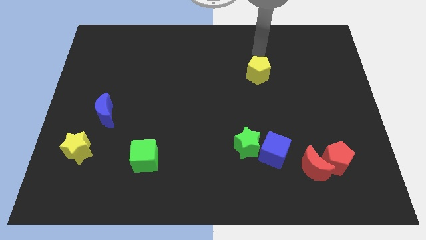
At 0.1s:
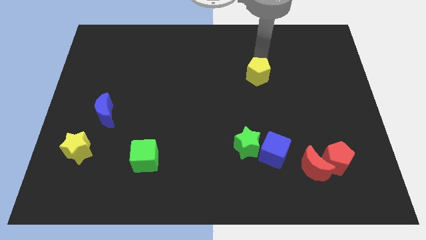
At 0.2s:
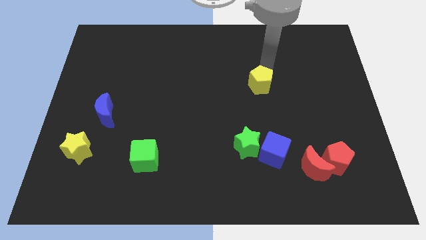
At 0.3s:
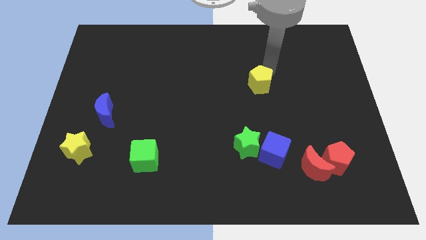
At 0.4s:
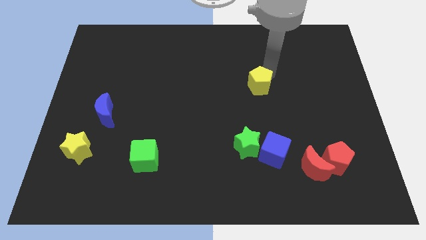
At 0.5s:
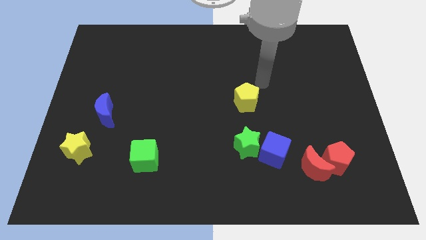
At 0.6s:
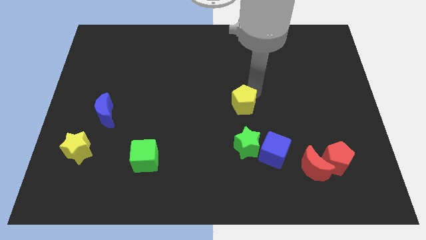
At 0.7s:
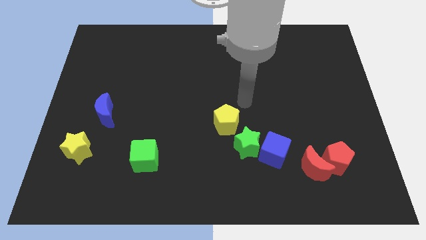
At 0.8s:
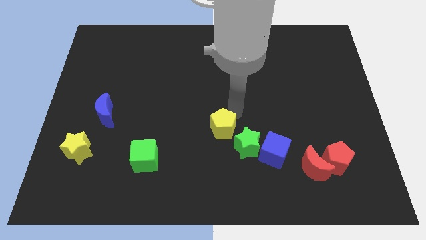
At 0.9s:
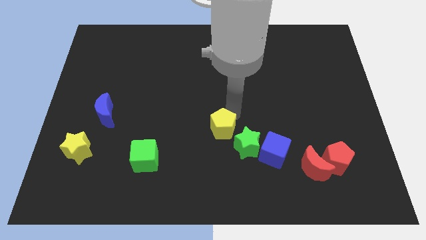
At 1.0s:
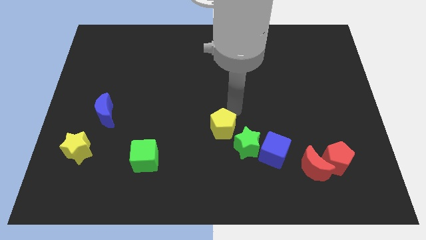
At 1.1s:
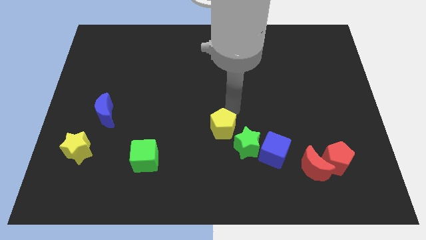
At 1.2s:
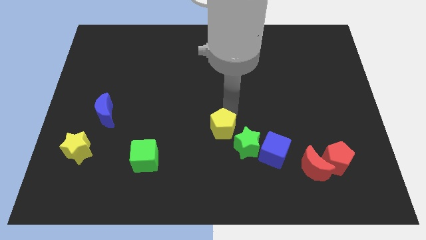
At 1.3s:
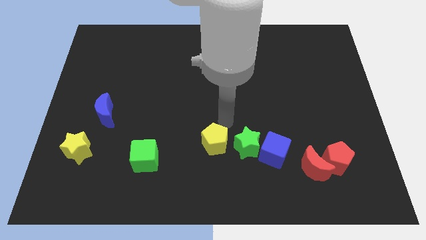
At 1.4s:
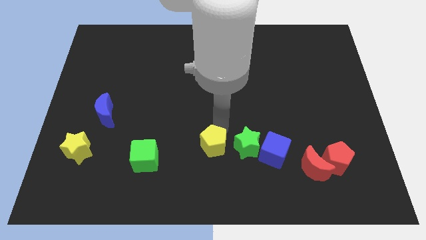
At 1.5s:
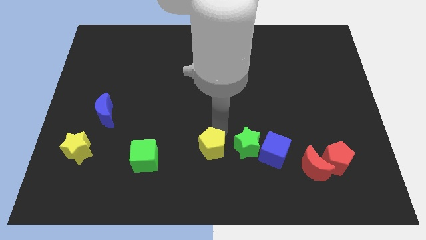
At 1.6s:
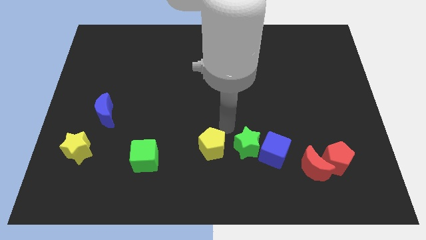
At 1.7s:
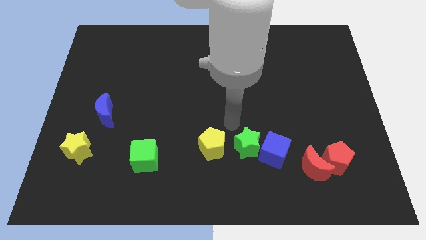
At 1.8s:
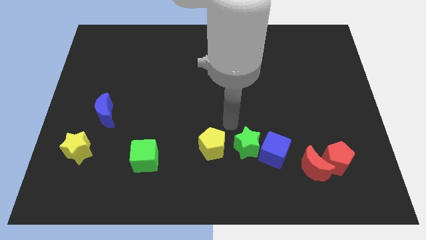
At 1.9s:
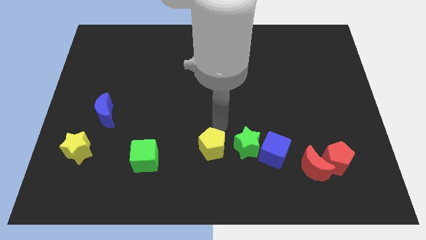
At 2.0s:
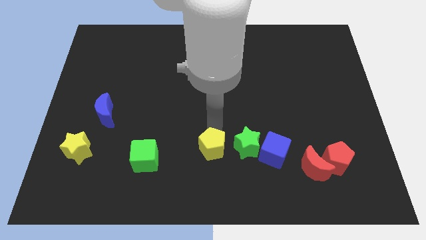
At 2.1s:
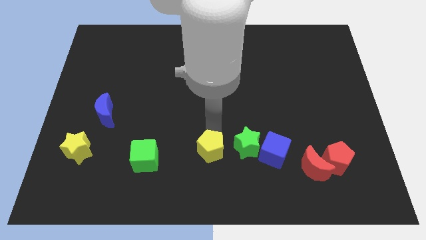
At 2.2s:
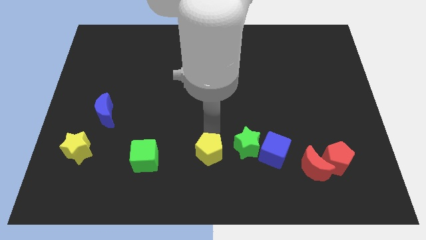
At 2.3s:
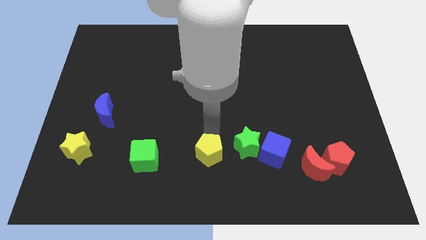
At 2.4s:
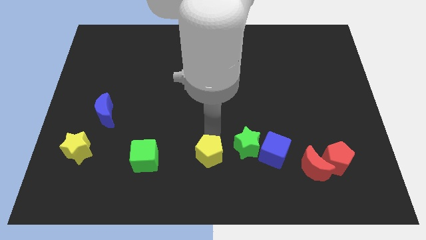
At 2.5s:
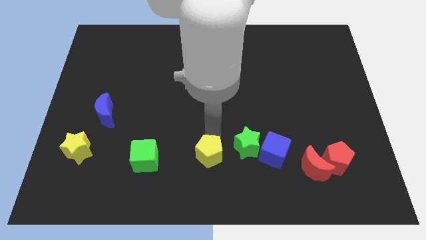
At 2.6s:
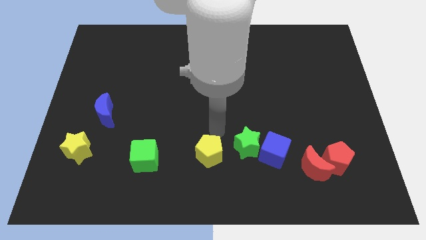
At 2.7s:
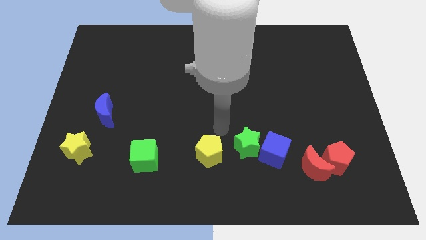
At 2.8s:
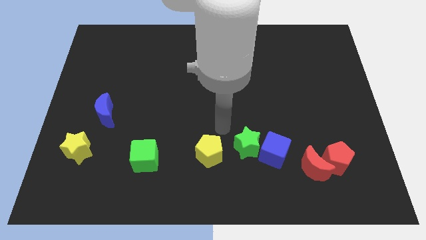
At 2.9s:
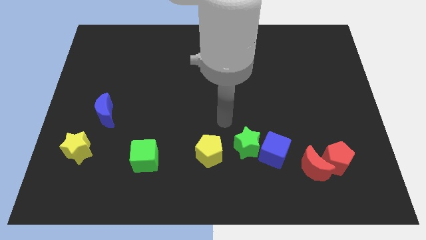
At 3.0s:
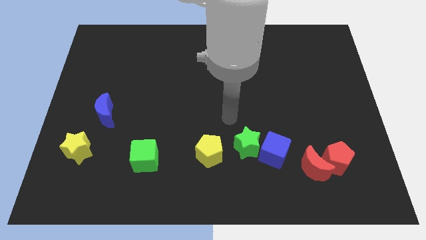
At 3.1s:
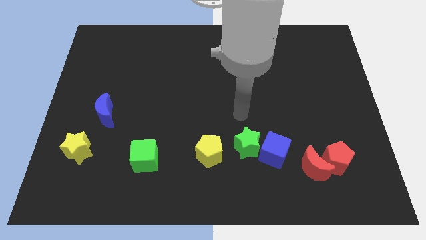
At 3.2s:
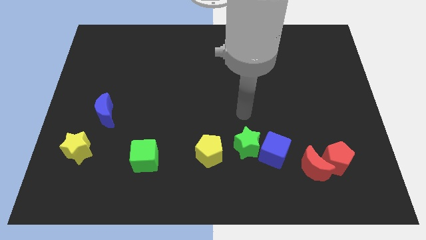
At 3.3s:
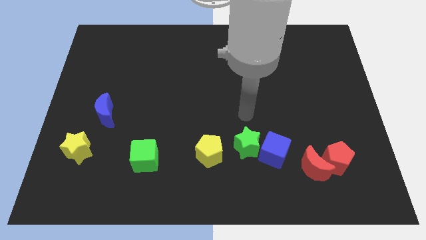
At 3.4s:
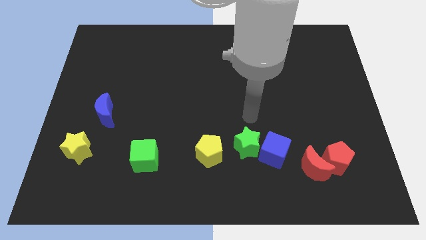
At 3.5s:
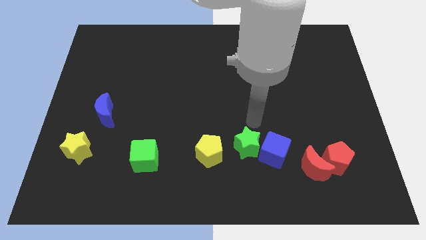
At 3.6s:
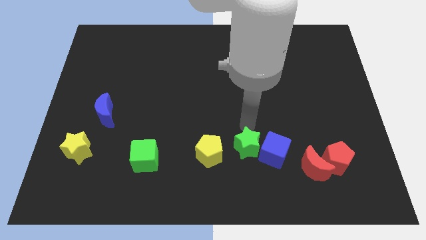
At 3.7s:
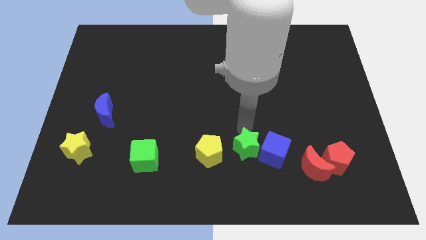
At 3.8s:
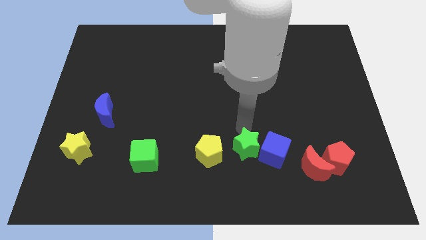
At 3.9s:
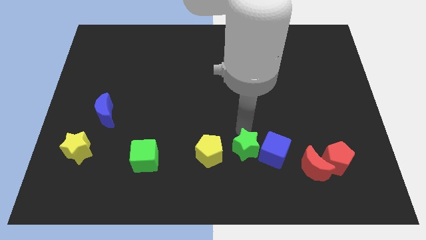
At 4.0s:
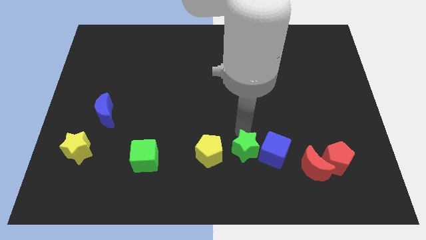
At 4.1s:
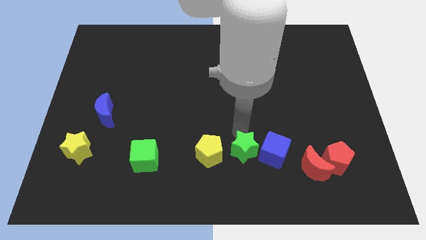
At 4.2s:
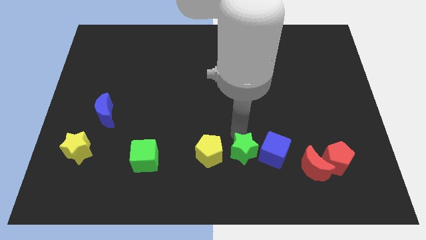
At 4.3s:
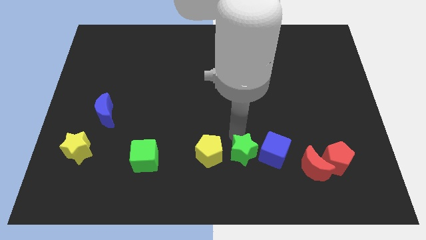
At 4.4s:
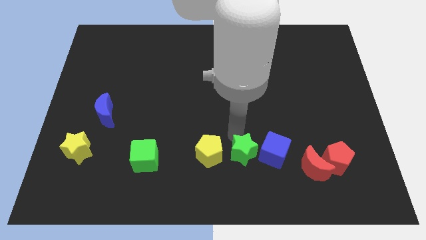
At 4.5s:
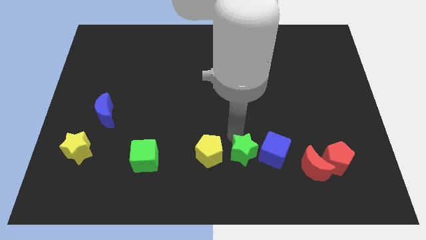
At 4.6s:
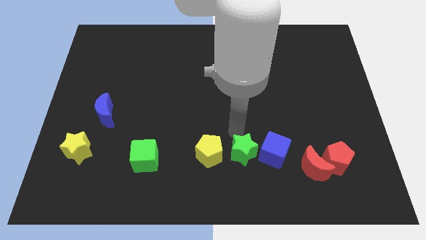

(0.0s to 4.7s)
push the yellow pentagon along with the green star towards the left of blue cube

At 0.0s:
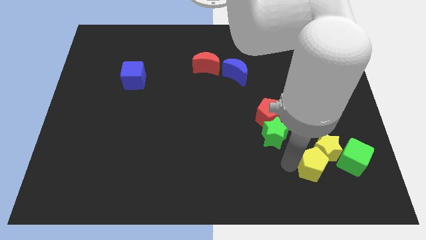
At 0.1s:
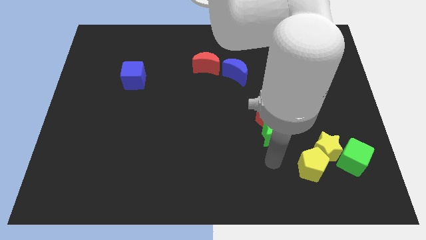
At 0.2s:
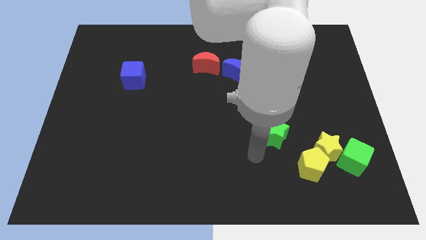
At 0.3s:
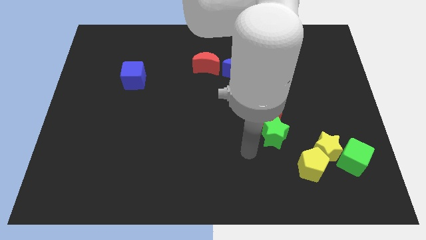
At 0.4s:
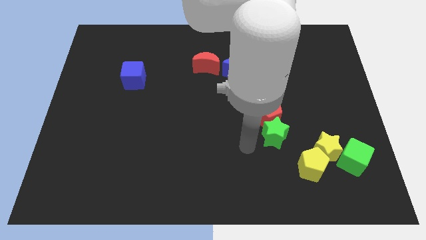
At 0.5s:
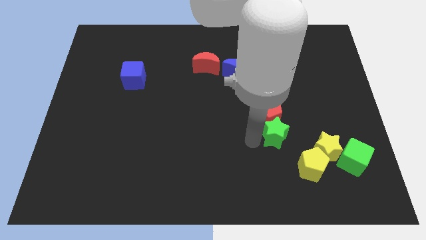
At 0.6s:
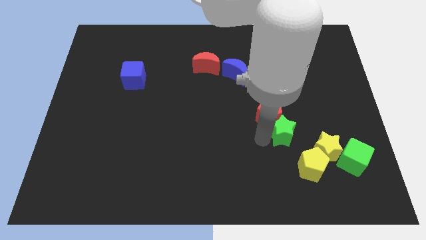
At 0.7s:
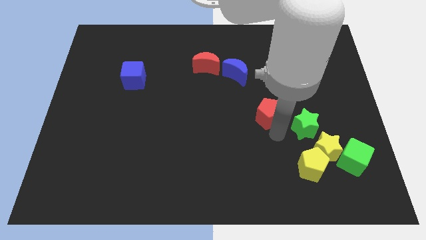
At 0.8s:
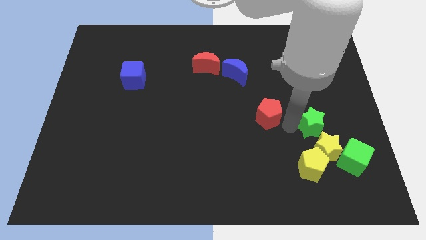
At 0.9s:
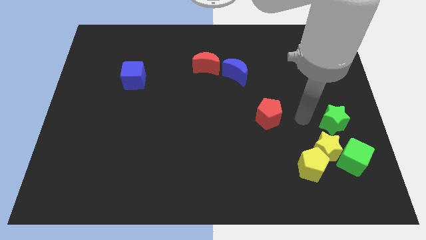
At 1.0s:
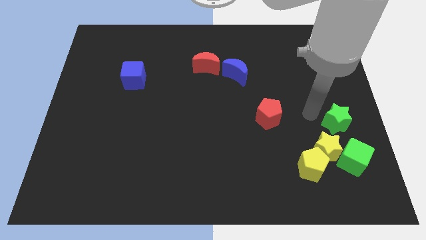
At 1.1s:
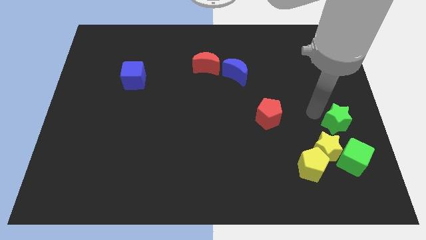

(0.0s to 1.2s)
separate the green star away from the red pentagon

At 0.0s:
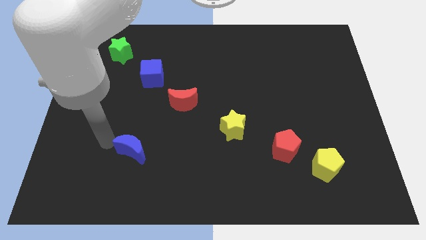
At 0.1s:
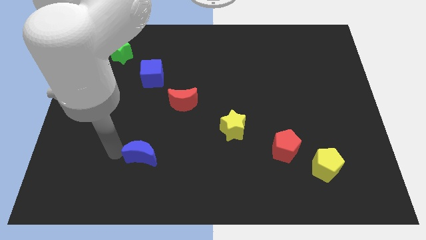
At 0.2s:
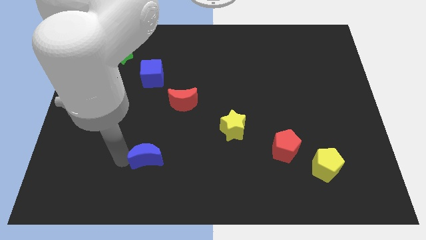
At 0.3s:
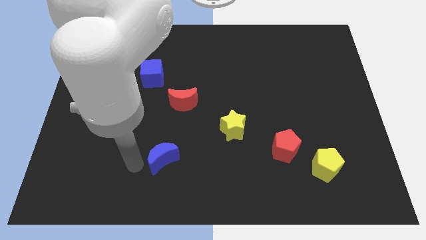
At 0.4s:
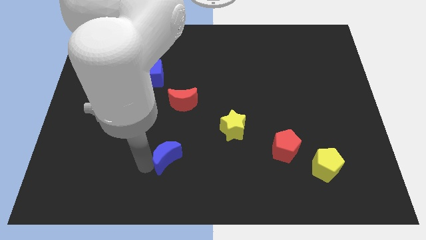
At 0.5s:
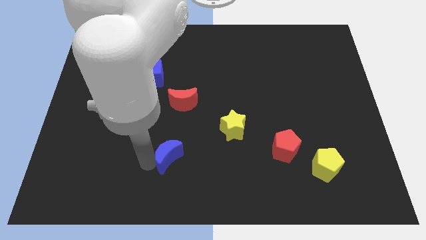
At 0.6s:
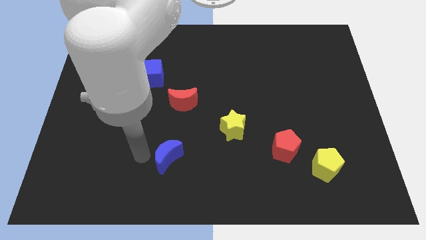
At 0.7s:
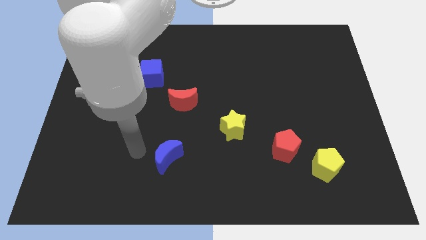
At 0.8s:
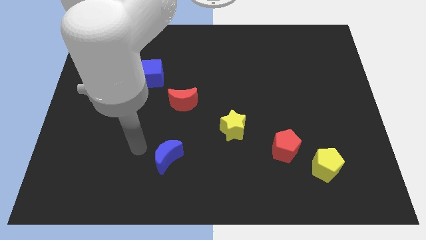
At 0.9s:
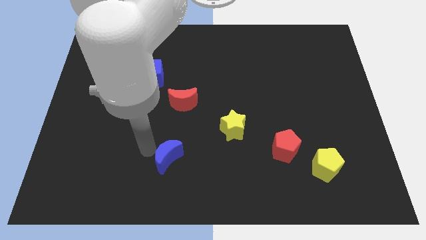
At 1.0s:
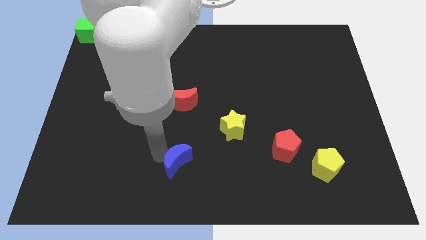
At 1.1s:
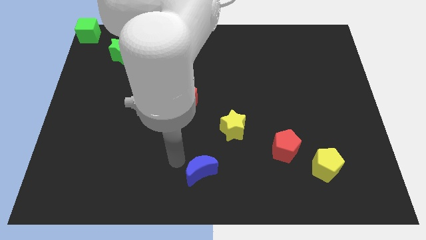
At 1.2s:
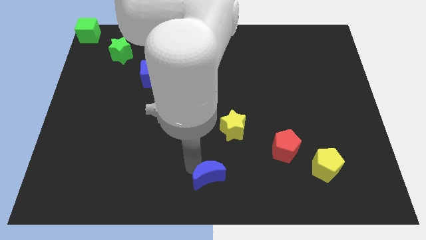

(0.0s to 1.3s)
place the blue moon below the yellow star

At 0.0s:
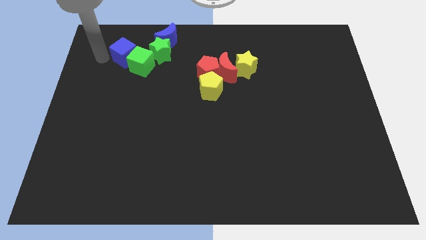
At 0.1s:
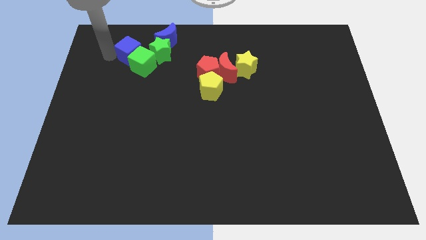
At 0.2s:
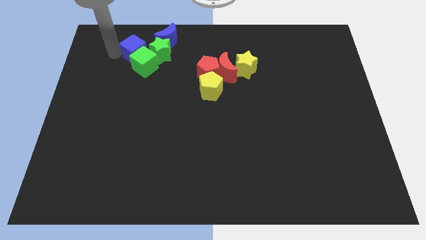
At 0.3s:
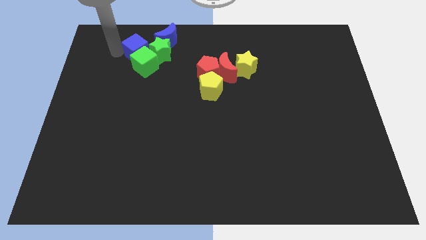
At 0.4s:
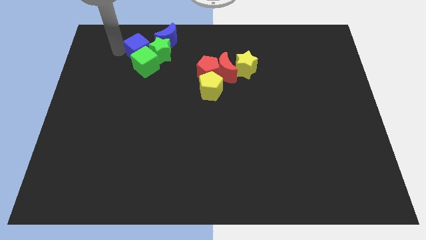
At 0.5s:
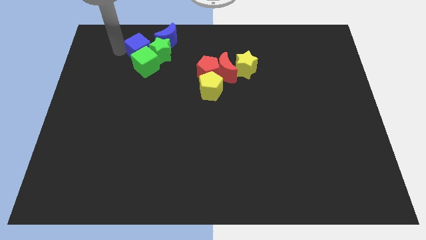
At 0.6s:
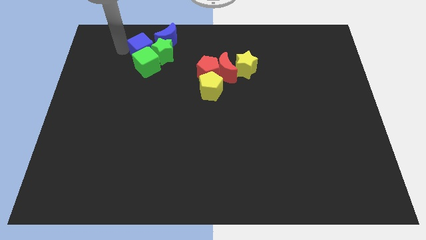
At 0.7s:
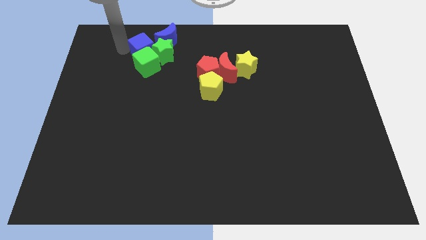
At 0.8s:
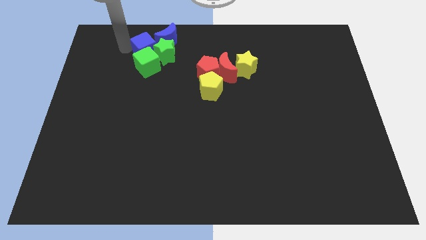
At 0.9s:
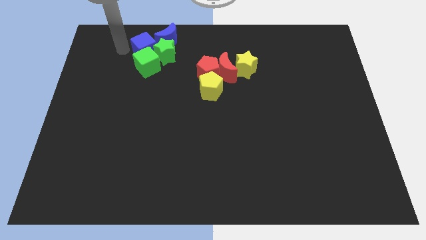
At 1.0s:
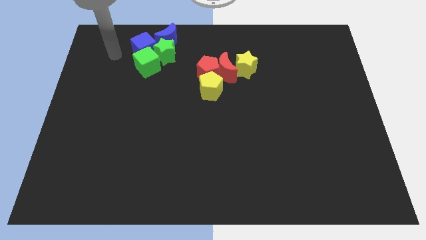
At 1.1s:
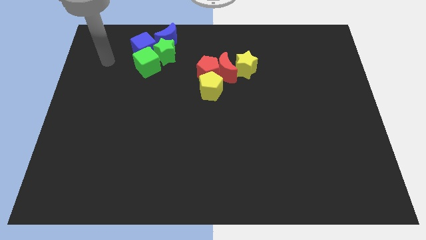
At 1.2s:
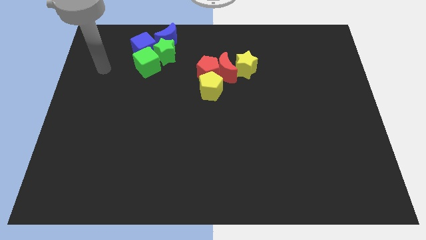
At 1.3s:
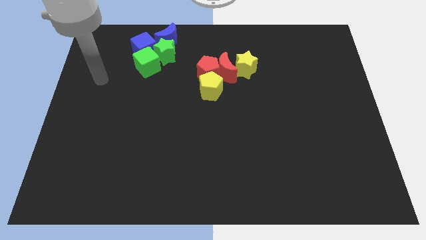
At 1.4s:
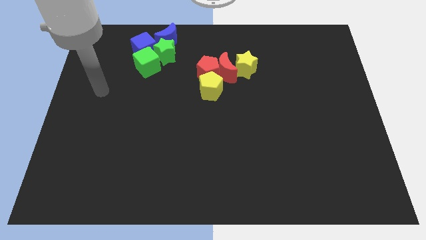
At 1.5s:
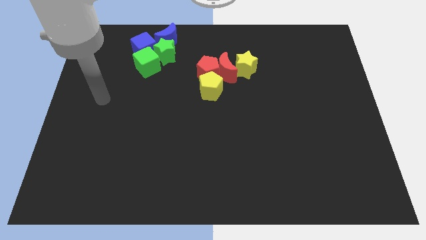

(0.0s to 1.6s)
adjust the blue cube with blue crescent and the green blocks
